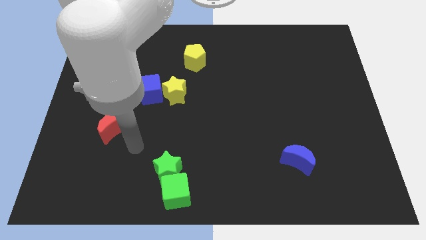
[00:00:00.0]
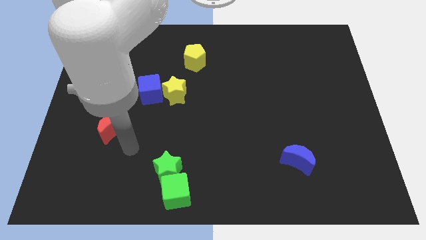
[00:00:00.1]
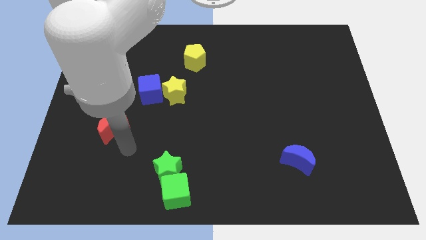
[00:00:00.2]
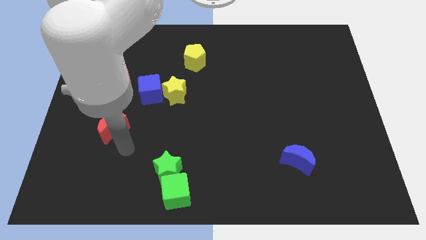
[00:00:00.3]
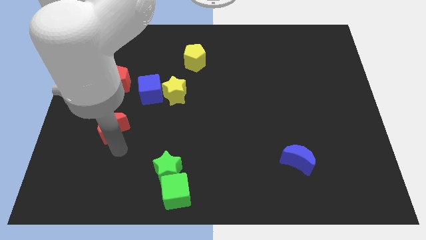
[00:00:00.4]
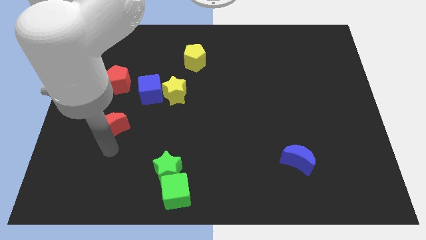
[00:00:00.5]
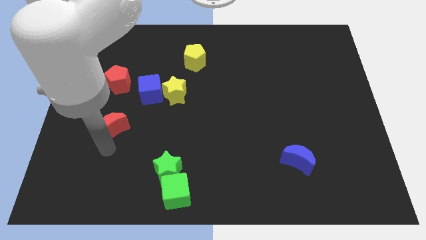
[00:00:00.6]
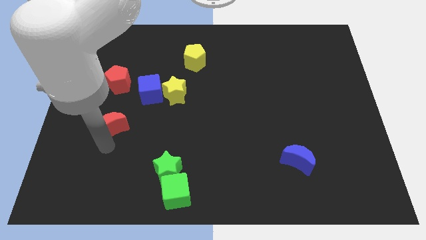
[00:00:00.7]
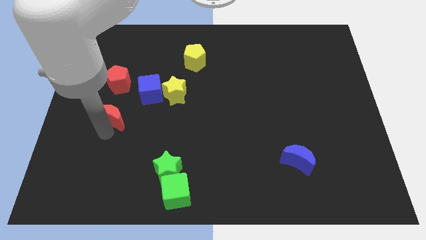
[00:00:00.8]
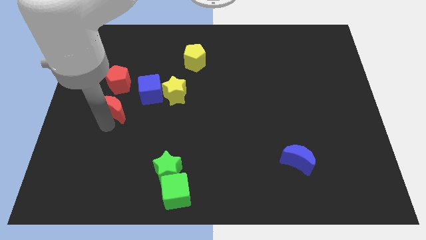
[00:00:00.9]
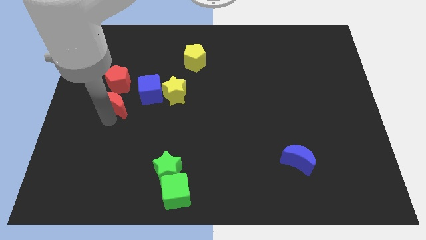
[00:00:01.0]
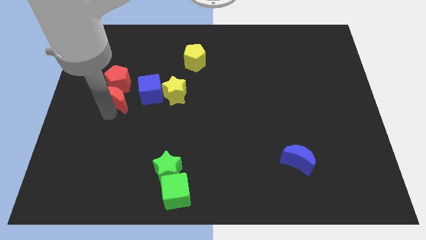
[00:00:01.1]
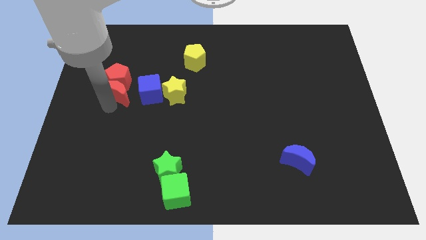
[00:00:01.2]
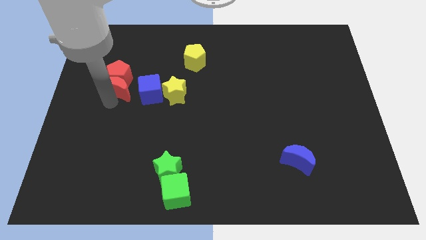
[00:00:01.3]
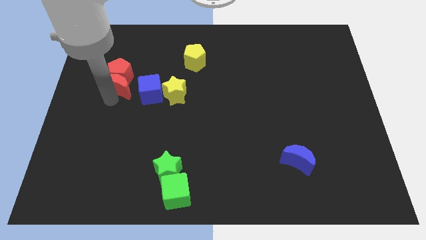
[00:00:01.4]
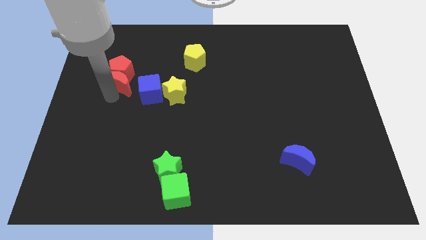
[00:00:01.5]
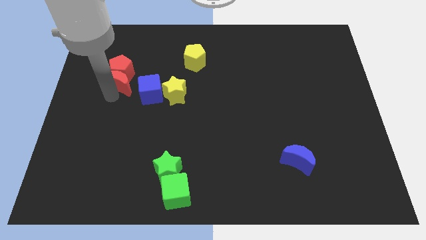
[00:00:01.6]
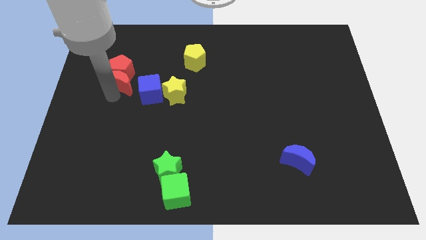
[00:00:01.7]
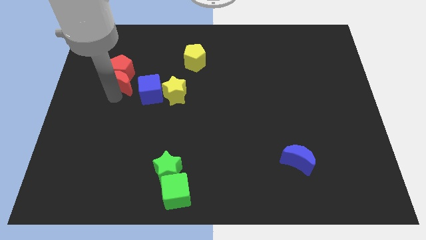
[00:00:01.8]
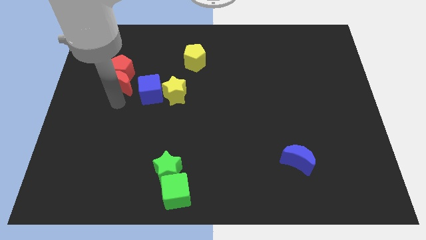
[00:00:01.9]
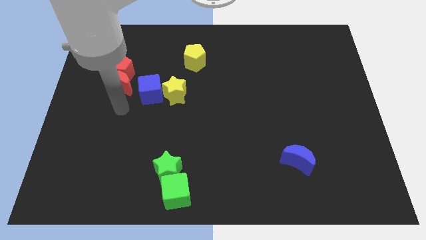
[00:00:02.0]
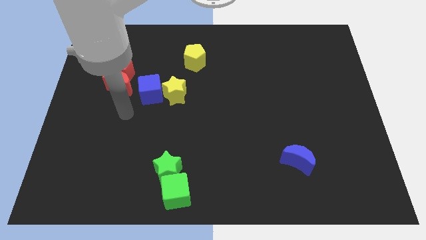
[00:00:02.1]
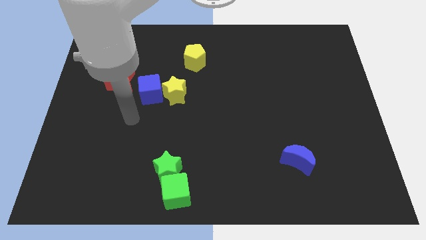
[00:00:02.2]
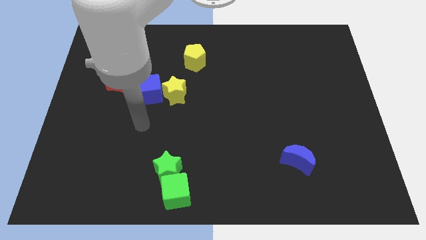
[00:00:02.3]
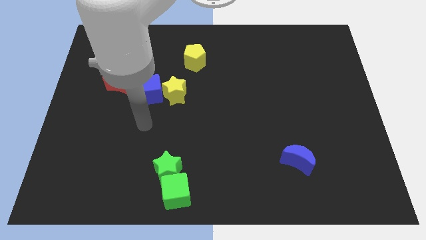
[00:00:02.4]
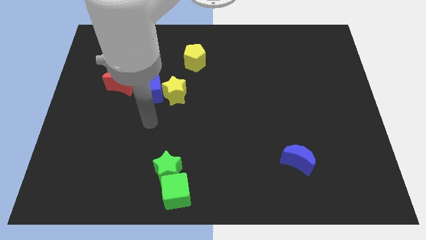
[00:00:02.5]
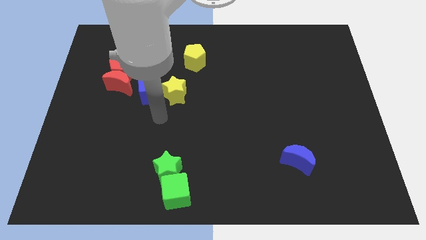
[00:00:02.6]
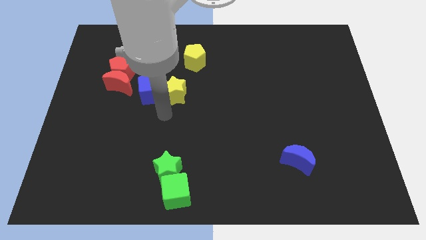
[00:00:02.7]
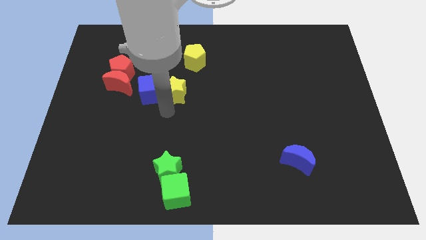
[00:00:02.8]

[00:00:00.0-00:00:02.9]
move the red blocks slightly up

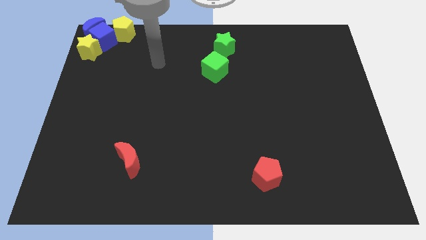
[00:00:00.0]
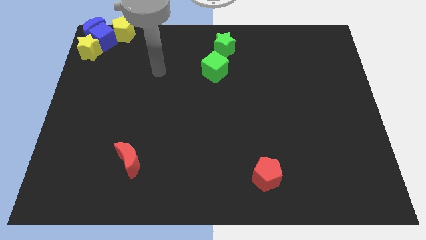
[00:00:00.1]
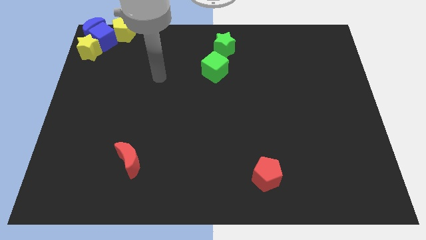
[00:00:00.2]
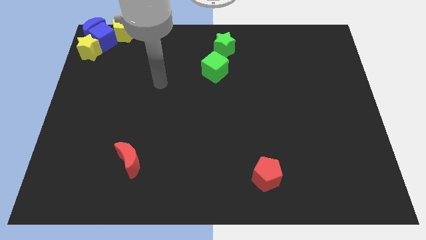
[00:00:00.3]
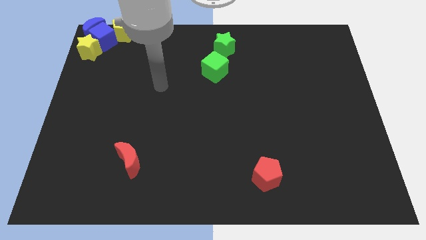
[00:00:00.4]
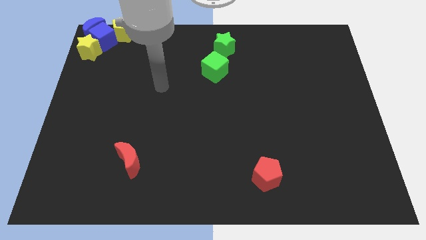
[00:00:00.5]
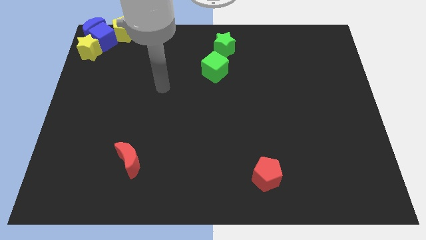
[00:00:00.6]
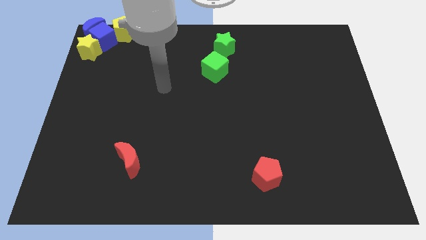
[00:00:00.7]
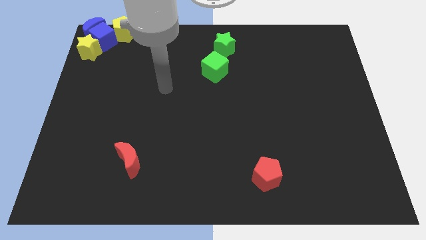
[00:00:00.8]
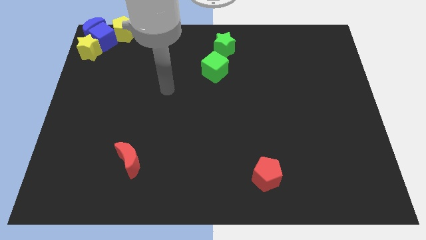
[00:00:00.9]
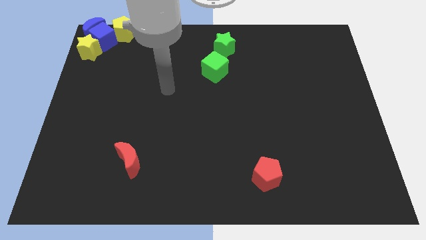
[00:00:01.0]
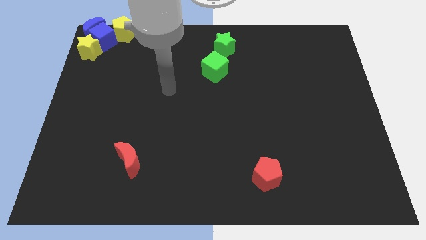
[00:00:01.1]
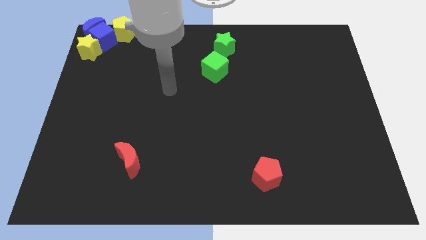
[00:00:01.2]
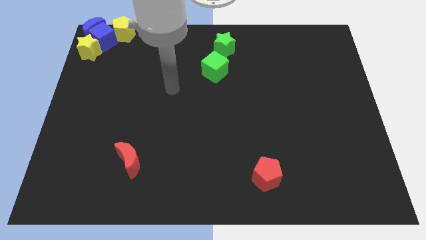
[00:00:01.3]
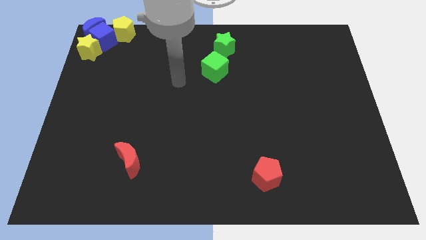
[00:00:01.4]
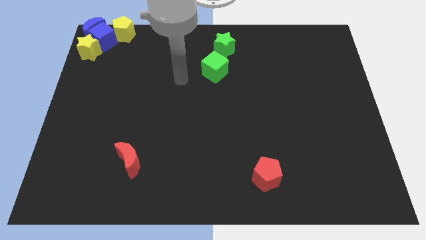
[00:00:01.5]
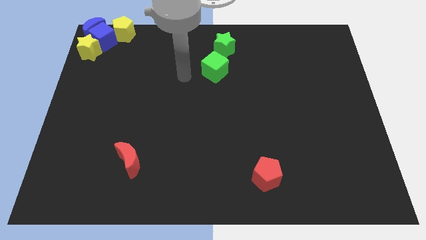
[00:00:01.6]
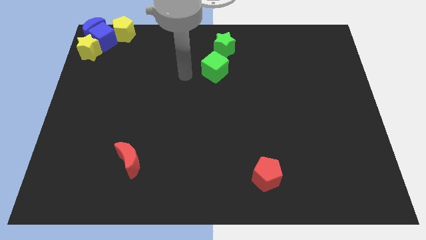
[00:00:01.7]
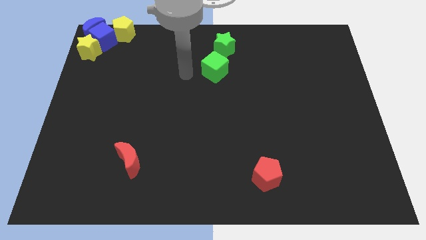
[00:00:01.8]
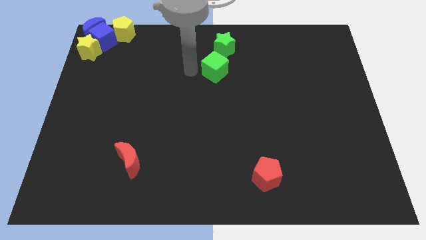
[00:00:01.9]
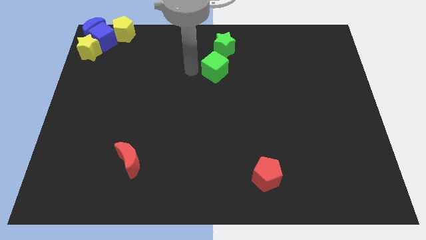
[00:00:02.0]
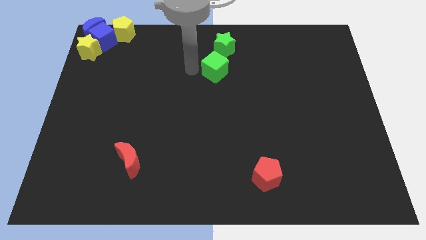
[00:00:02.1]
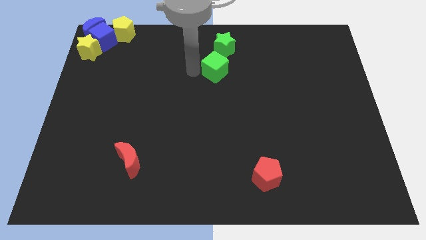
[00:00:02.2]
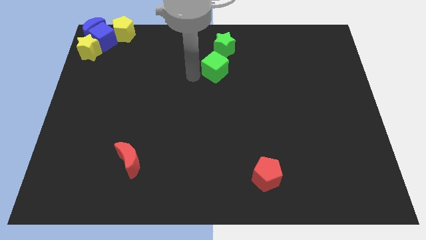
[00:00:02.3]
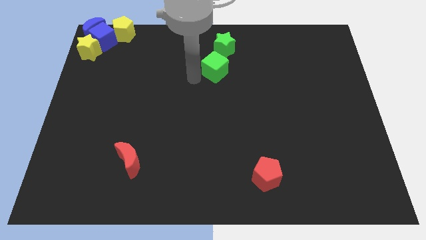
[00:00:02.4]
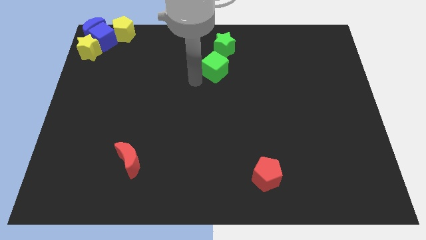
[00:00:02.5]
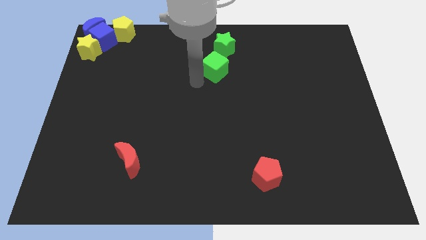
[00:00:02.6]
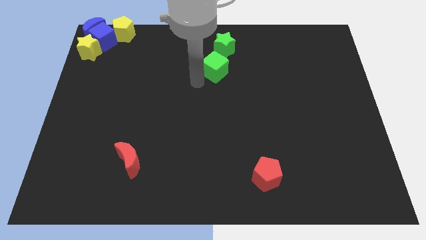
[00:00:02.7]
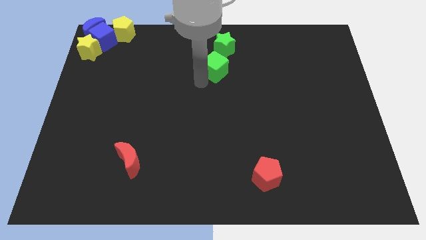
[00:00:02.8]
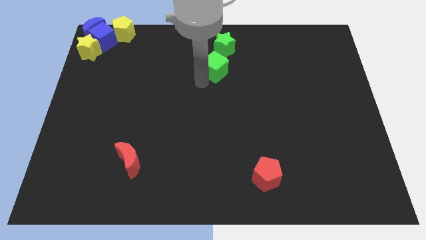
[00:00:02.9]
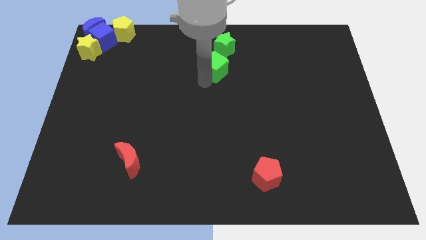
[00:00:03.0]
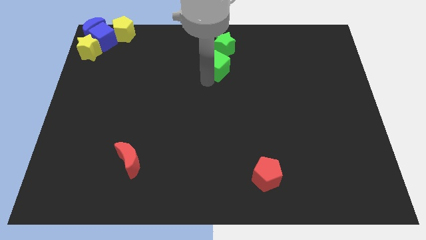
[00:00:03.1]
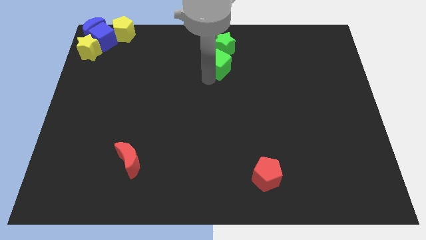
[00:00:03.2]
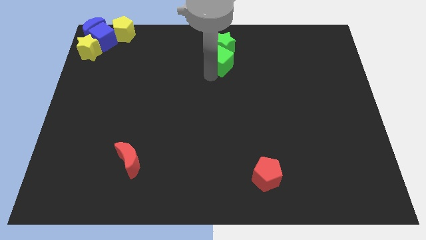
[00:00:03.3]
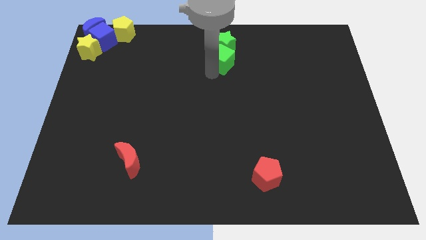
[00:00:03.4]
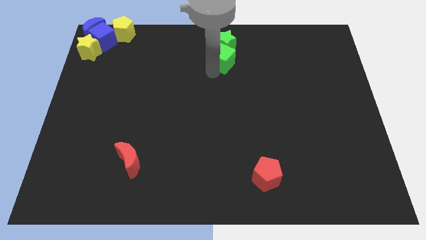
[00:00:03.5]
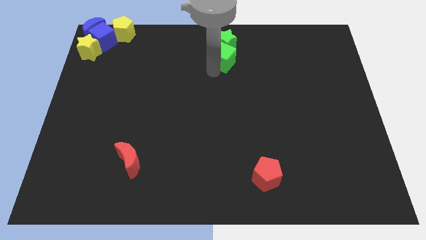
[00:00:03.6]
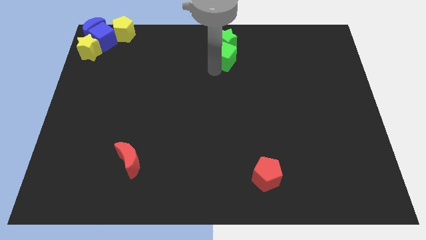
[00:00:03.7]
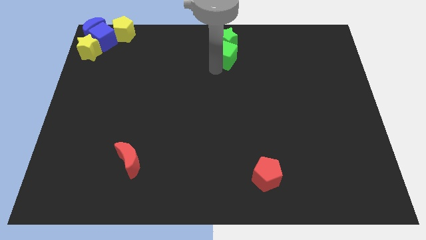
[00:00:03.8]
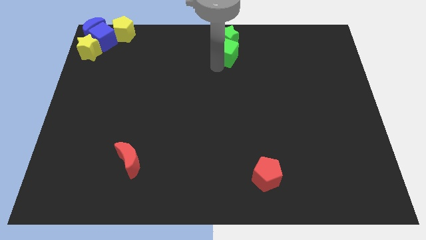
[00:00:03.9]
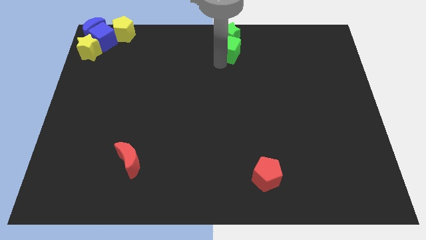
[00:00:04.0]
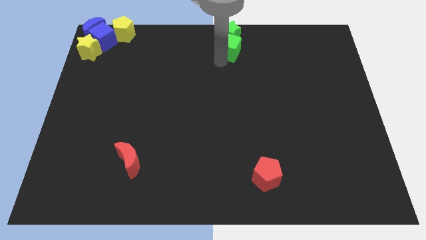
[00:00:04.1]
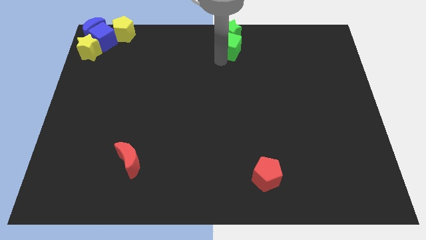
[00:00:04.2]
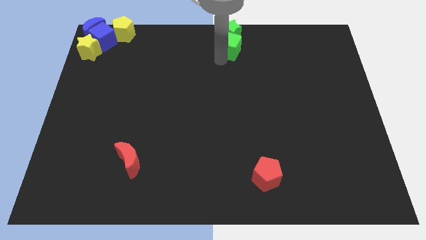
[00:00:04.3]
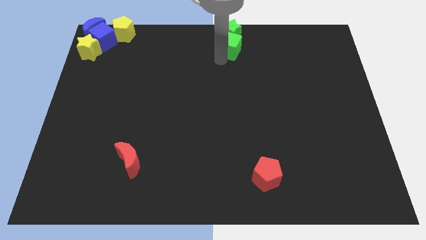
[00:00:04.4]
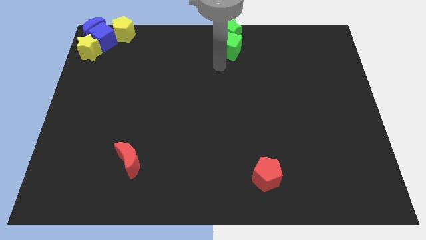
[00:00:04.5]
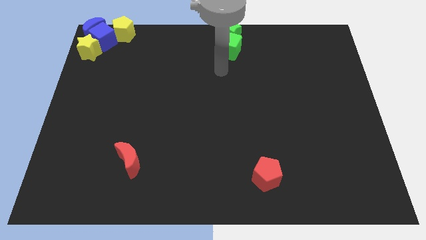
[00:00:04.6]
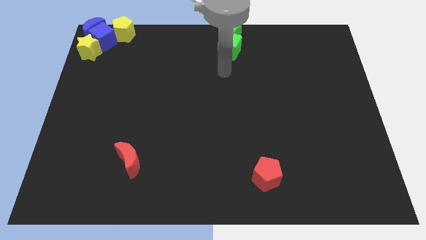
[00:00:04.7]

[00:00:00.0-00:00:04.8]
move green blocks to the top middle of the board

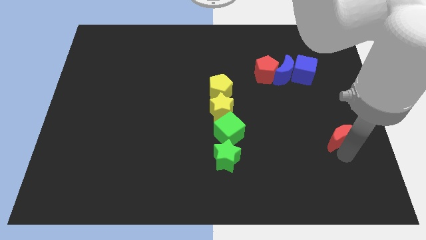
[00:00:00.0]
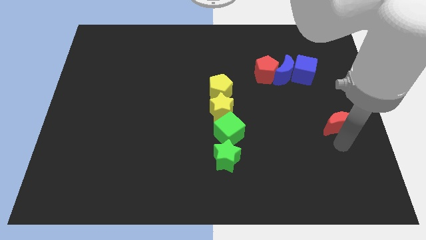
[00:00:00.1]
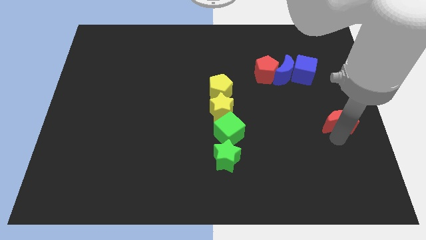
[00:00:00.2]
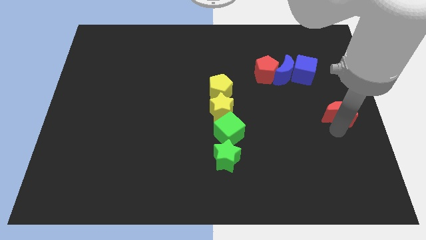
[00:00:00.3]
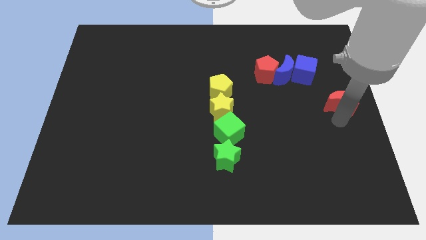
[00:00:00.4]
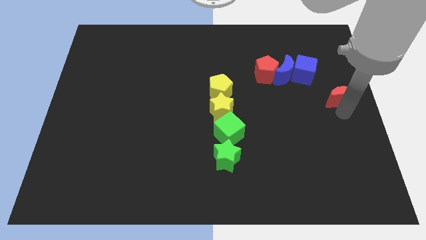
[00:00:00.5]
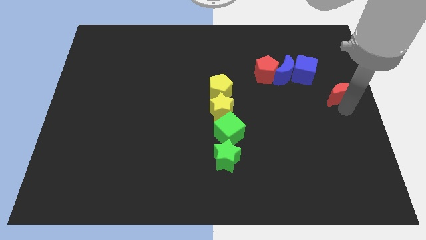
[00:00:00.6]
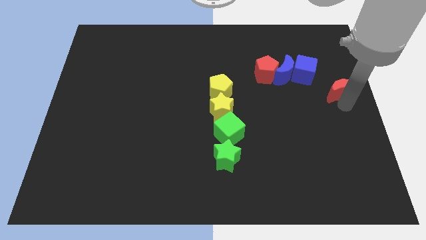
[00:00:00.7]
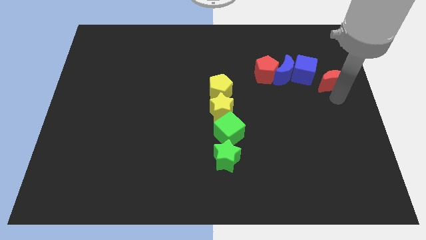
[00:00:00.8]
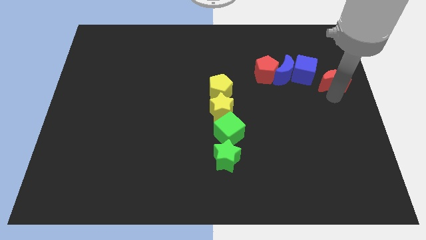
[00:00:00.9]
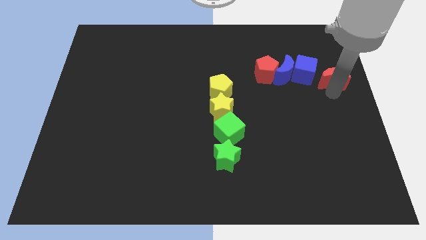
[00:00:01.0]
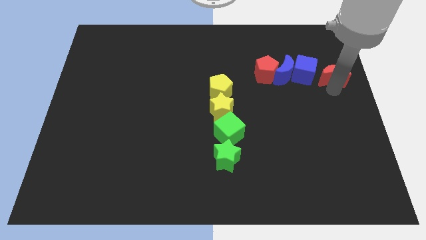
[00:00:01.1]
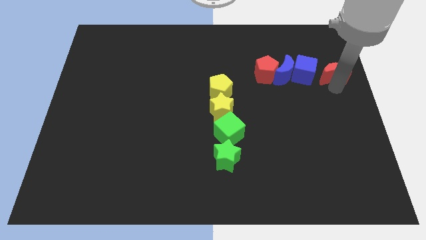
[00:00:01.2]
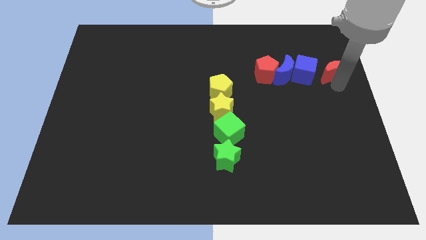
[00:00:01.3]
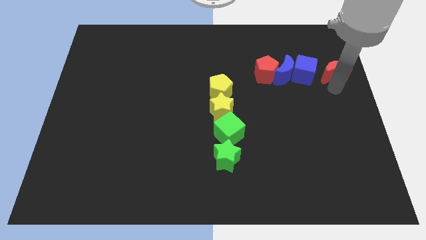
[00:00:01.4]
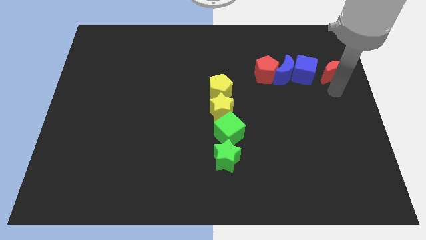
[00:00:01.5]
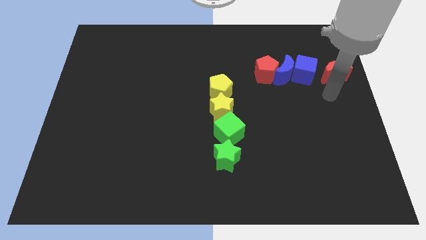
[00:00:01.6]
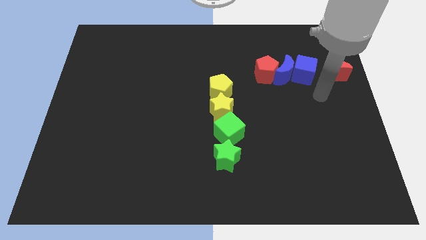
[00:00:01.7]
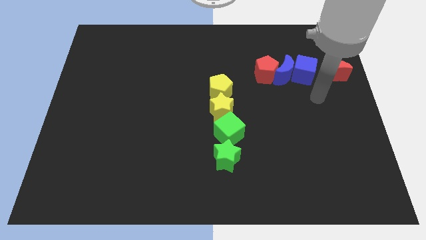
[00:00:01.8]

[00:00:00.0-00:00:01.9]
place the red crescent to the right side of blue cube
